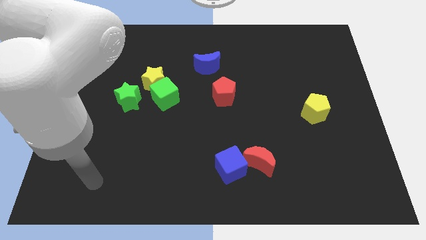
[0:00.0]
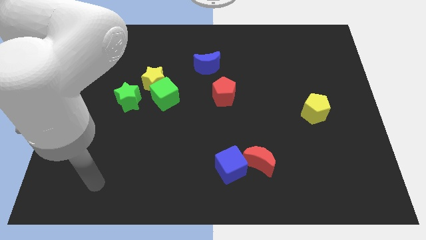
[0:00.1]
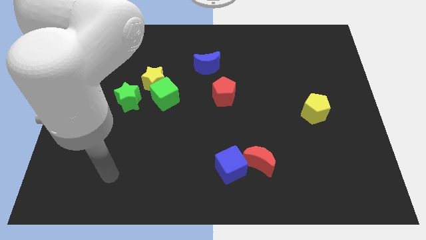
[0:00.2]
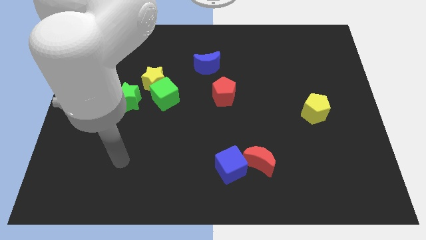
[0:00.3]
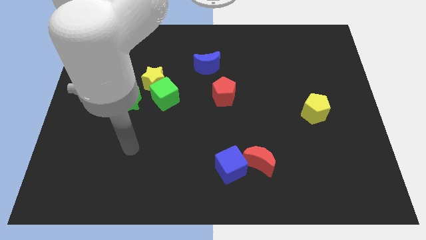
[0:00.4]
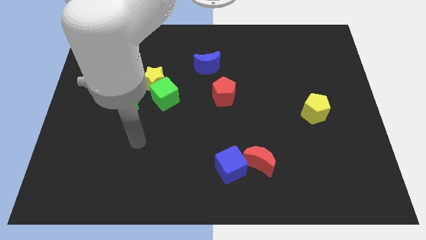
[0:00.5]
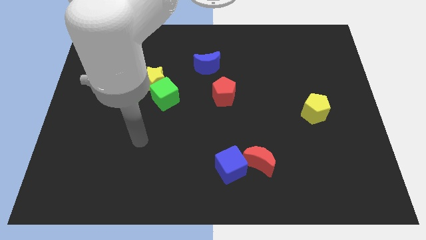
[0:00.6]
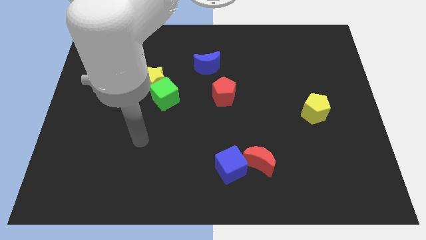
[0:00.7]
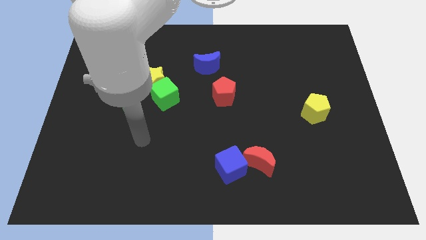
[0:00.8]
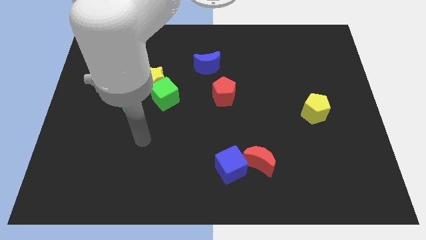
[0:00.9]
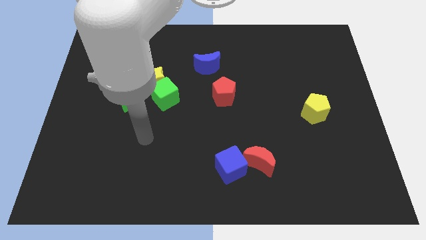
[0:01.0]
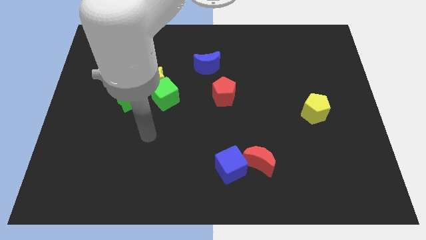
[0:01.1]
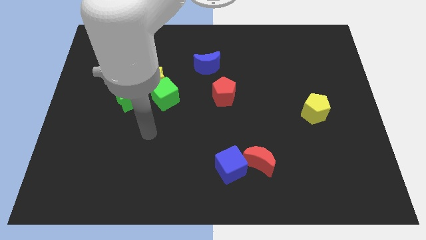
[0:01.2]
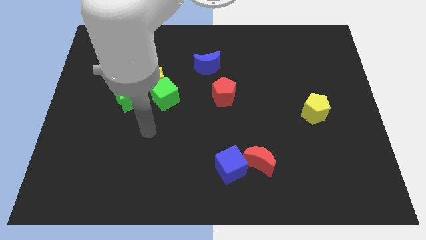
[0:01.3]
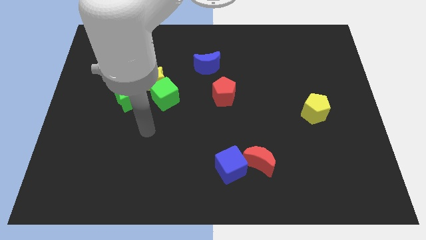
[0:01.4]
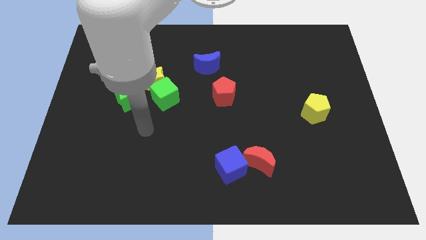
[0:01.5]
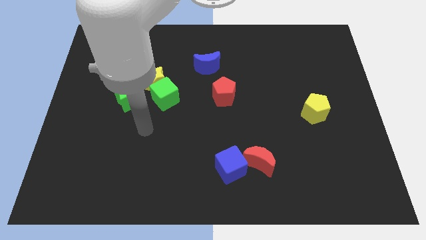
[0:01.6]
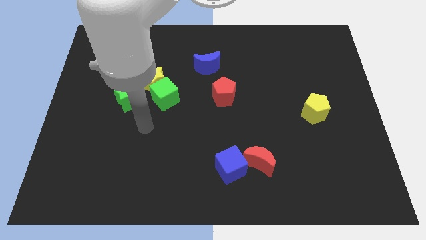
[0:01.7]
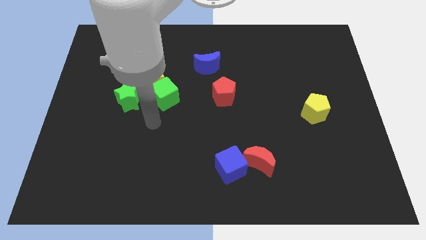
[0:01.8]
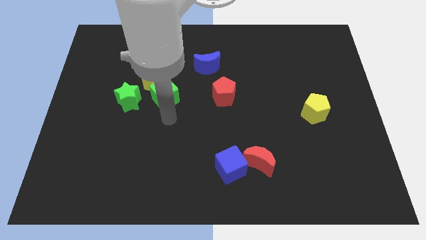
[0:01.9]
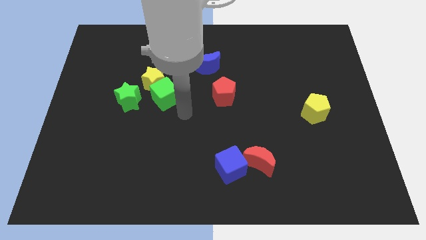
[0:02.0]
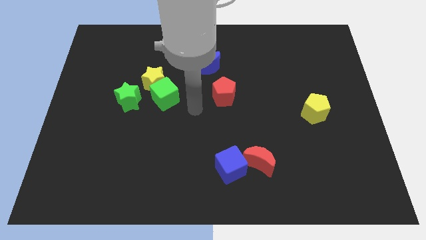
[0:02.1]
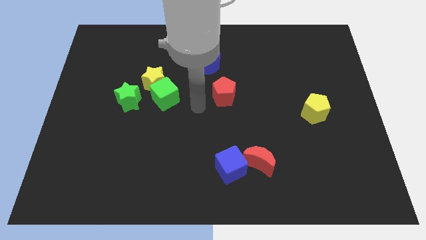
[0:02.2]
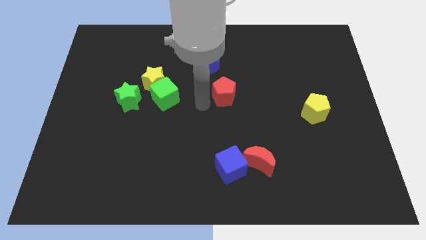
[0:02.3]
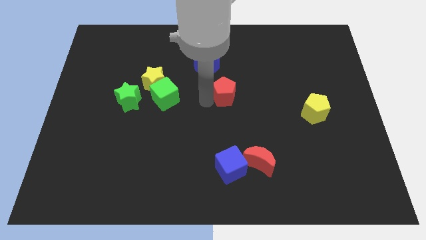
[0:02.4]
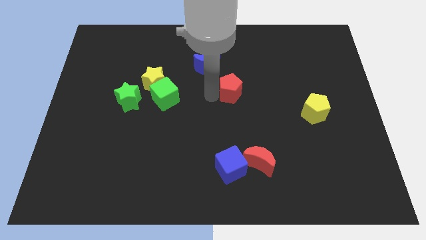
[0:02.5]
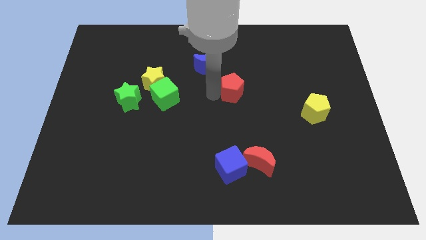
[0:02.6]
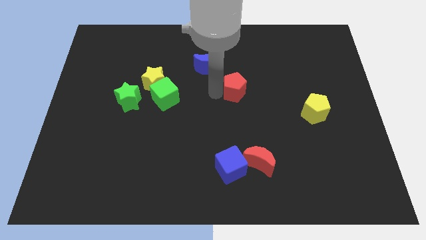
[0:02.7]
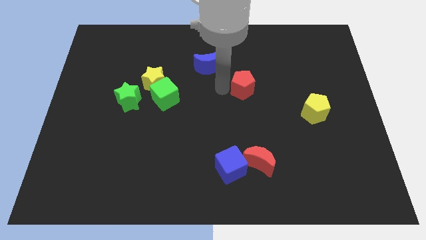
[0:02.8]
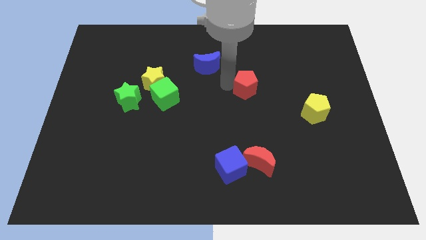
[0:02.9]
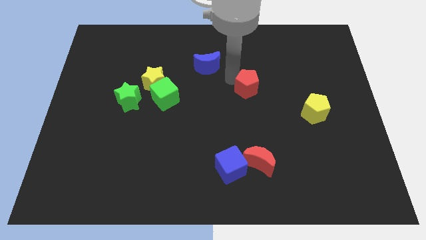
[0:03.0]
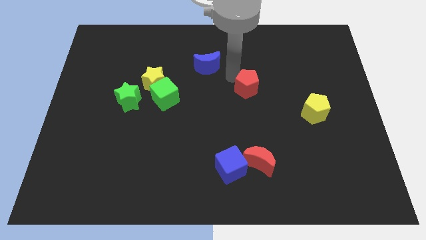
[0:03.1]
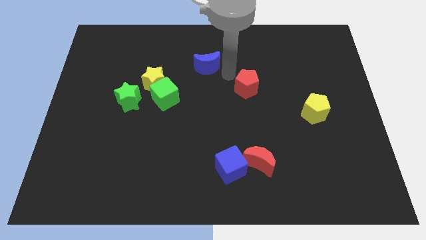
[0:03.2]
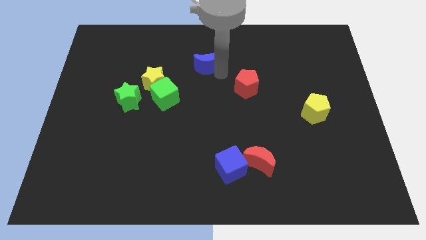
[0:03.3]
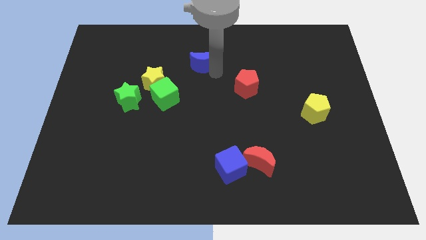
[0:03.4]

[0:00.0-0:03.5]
slightly push red pentagon towards right side

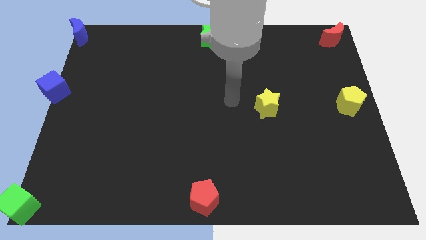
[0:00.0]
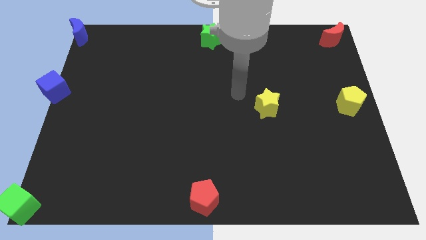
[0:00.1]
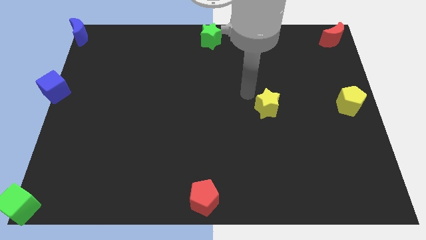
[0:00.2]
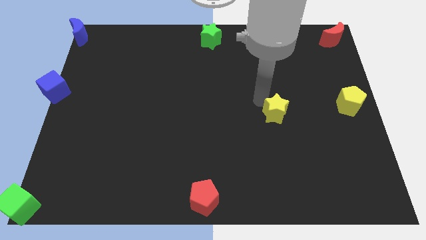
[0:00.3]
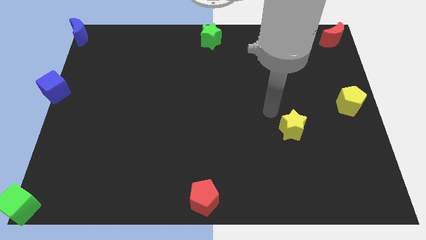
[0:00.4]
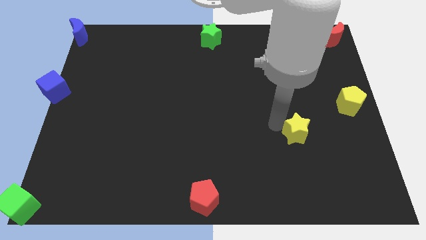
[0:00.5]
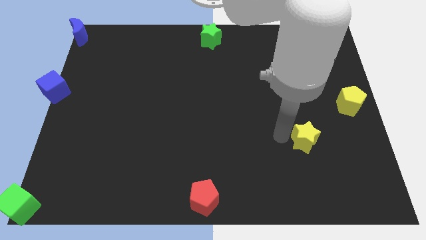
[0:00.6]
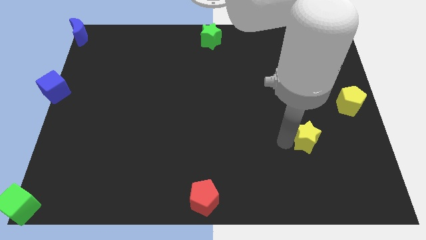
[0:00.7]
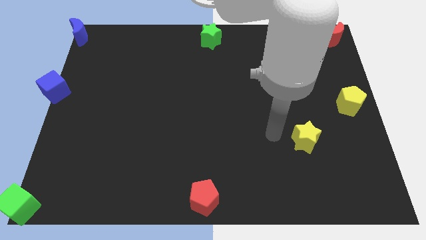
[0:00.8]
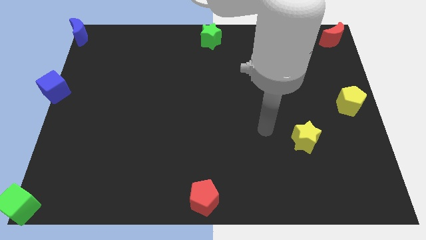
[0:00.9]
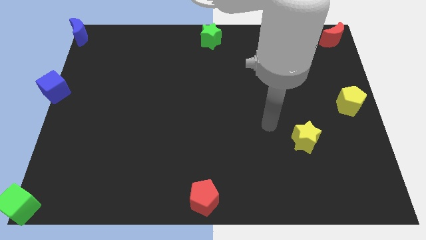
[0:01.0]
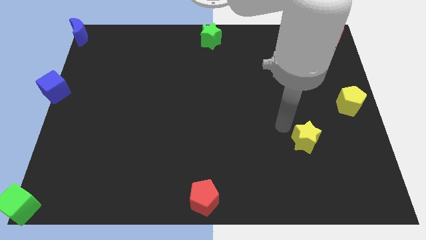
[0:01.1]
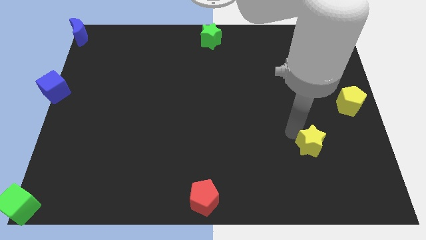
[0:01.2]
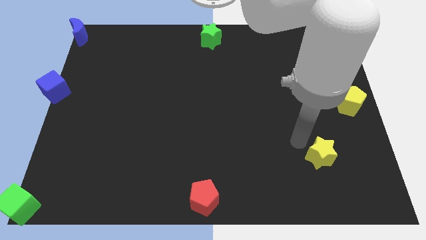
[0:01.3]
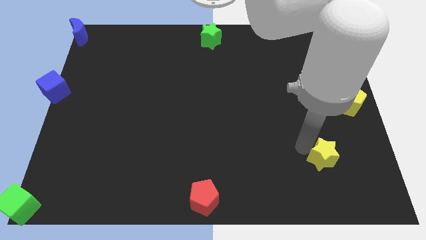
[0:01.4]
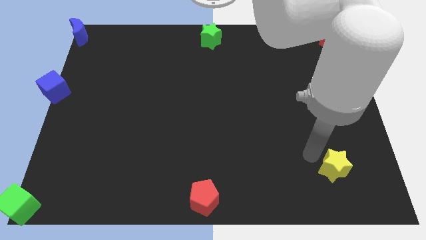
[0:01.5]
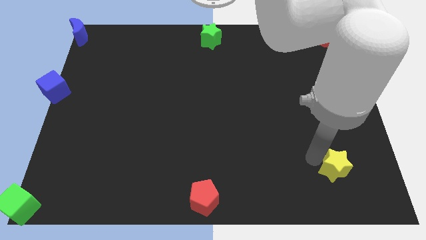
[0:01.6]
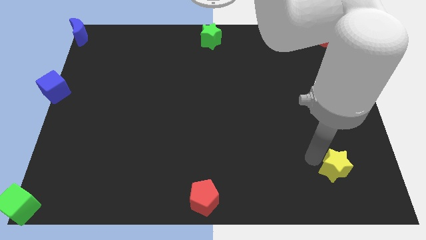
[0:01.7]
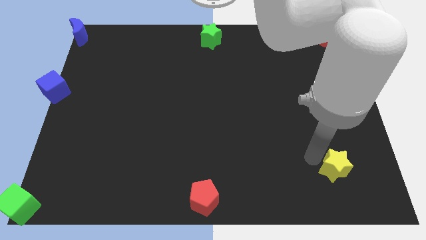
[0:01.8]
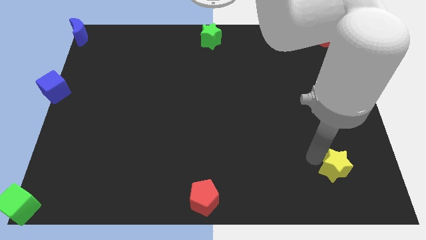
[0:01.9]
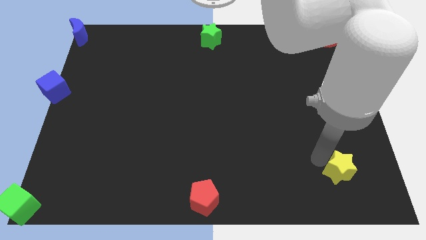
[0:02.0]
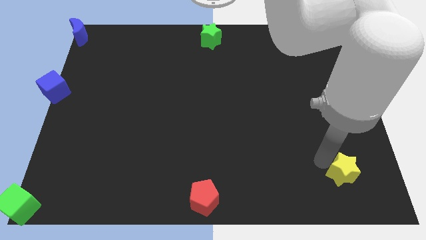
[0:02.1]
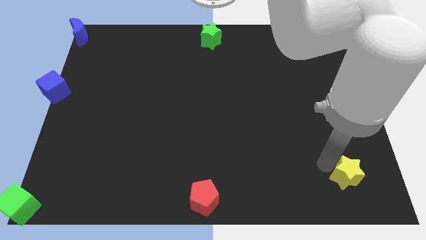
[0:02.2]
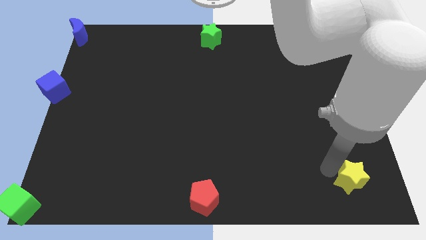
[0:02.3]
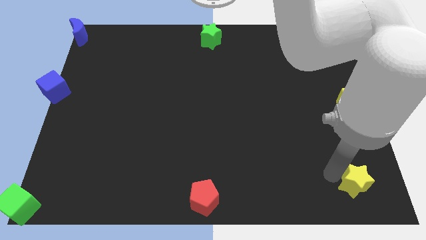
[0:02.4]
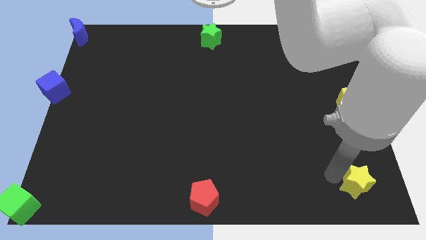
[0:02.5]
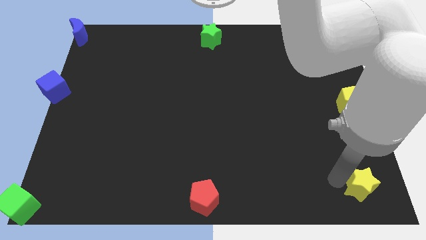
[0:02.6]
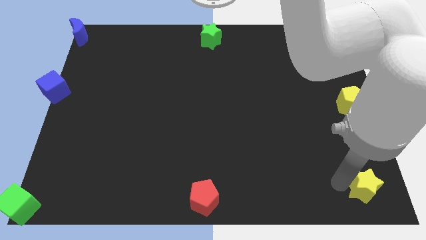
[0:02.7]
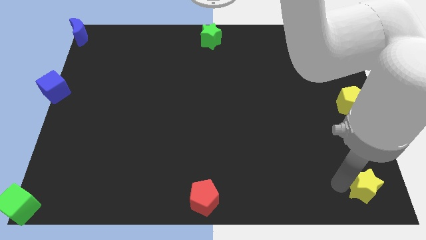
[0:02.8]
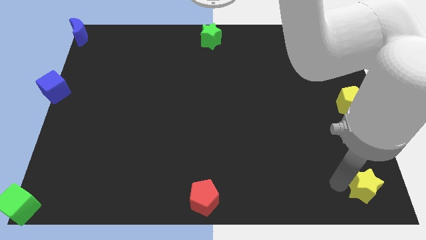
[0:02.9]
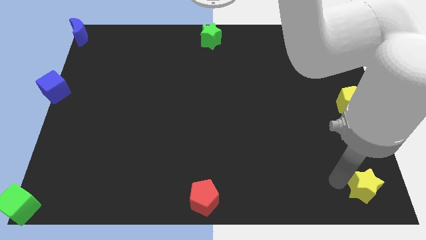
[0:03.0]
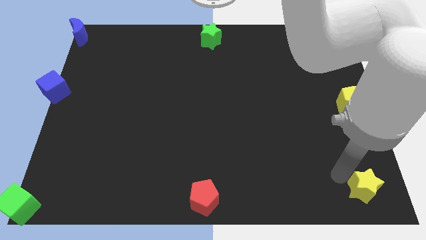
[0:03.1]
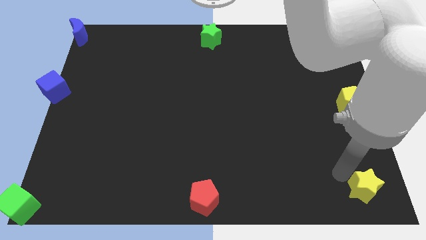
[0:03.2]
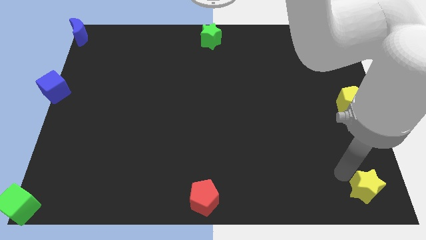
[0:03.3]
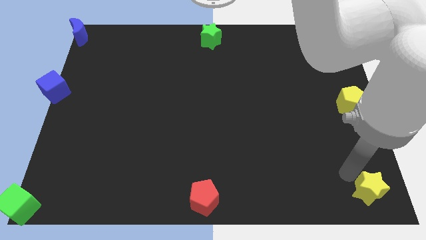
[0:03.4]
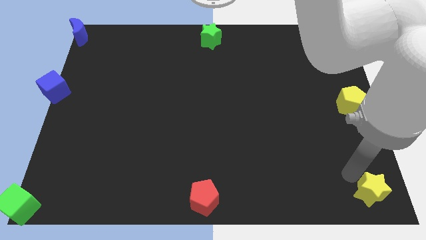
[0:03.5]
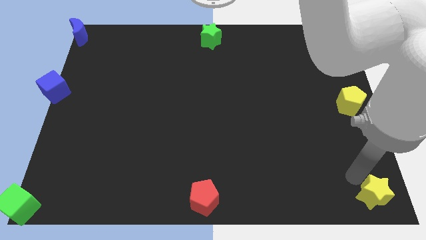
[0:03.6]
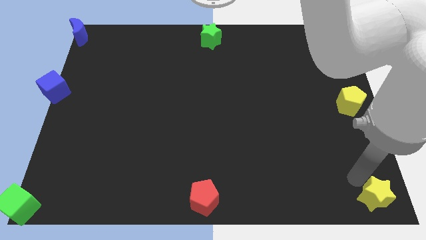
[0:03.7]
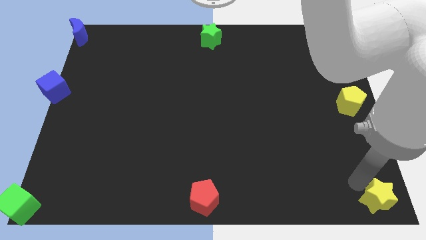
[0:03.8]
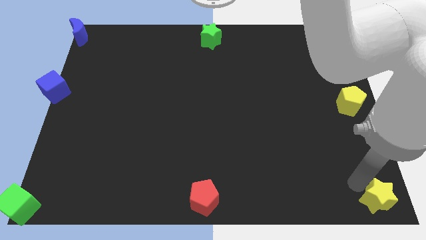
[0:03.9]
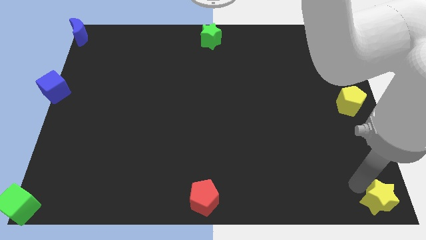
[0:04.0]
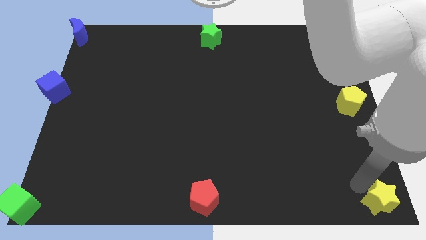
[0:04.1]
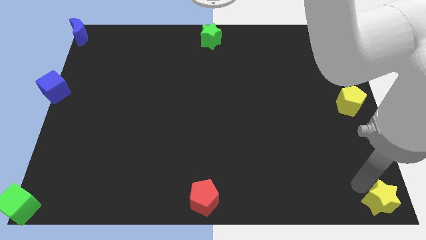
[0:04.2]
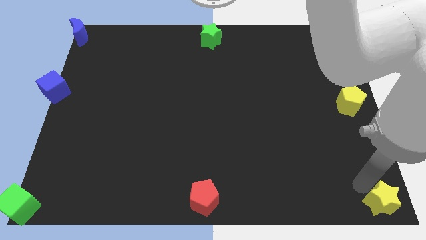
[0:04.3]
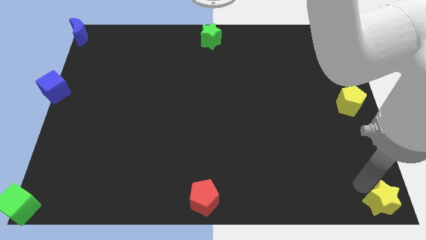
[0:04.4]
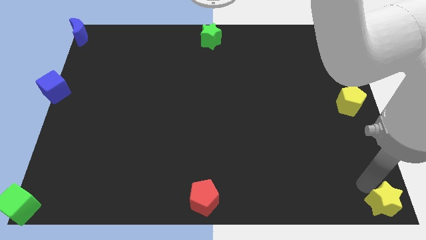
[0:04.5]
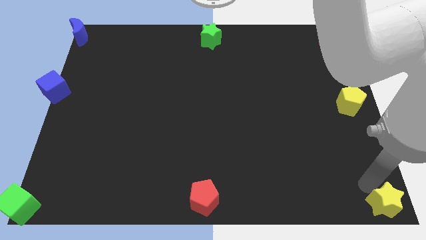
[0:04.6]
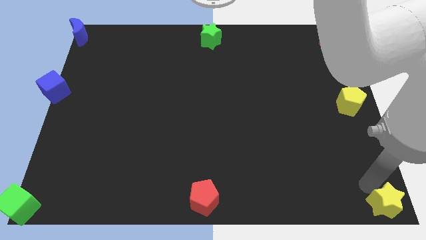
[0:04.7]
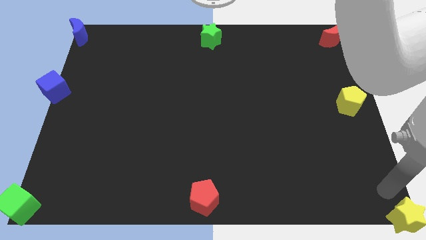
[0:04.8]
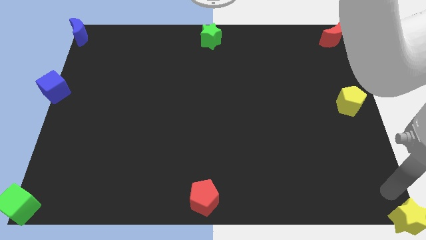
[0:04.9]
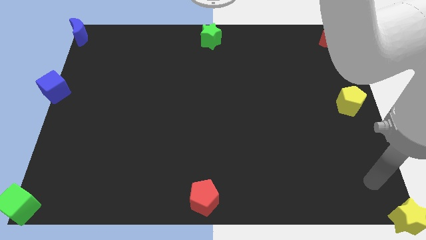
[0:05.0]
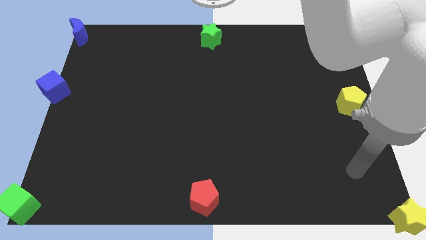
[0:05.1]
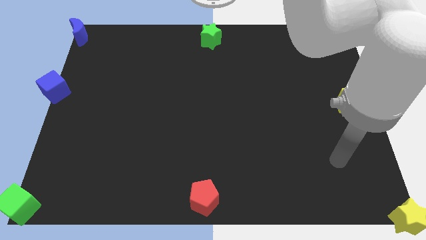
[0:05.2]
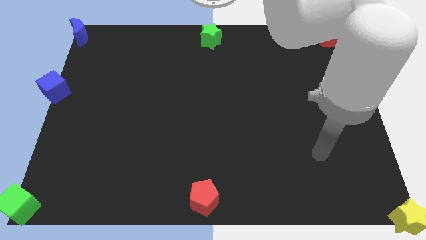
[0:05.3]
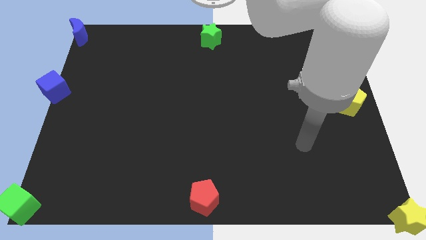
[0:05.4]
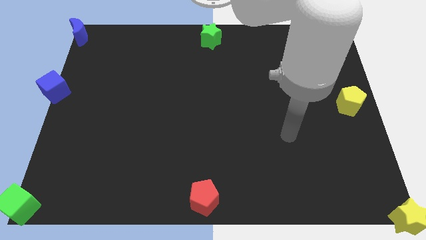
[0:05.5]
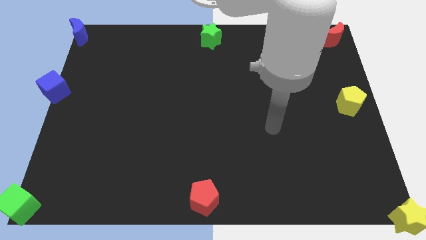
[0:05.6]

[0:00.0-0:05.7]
move the yellow star to the bottom right corner of the board
